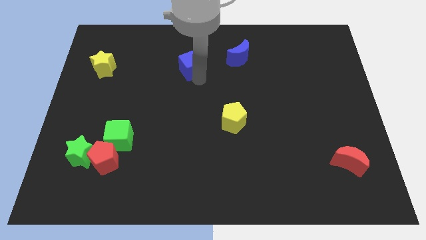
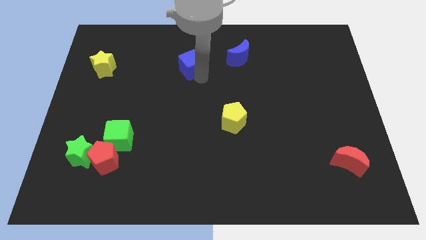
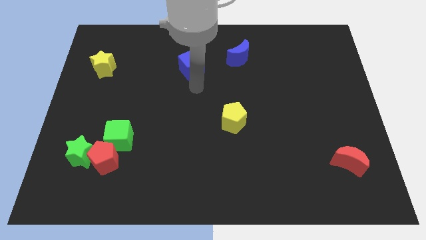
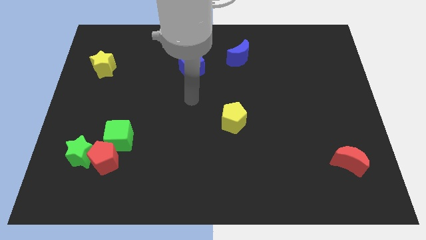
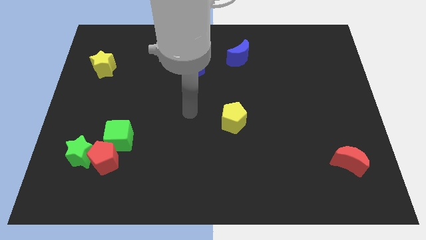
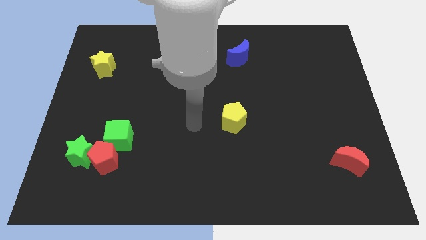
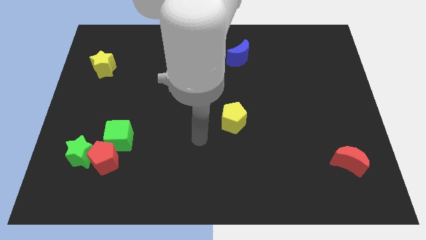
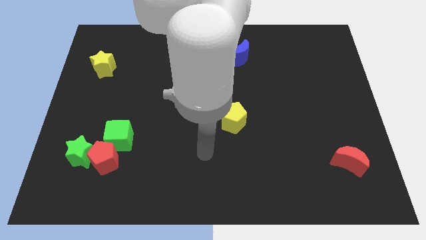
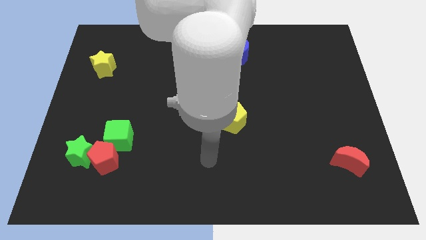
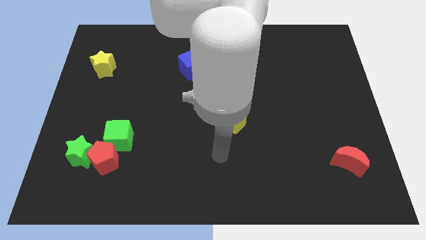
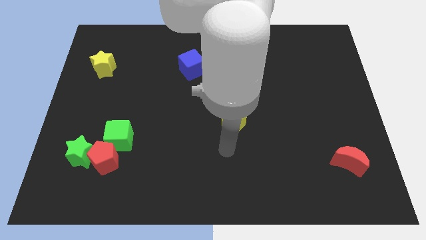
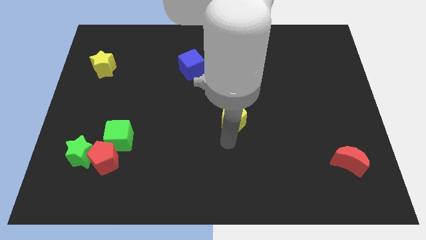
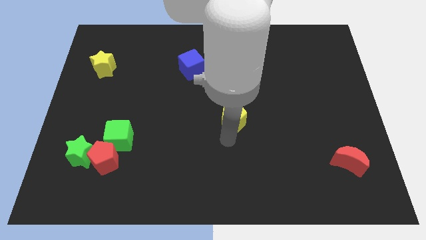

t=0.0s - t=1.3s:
place the arm below yellow pentagon

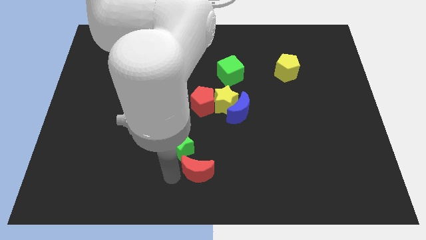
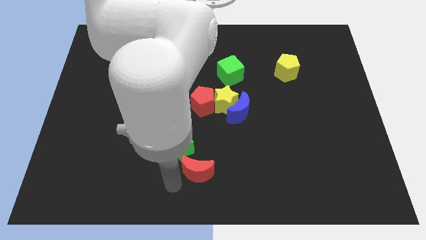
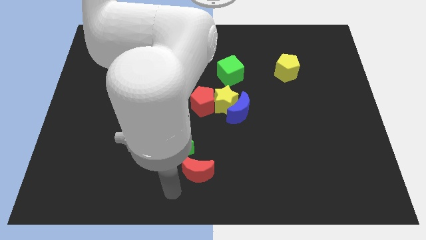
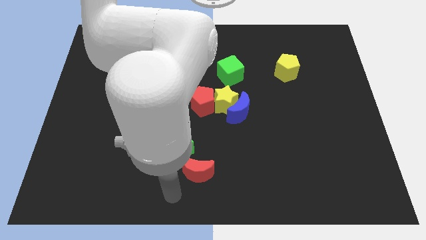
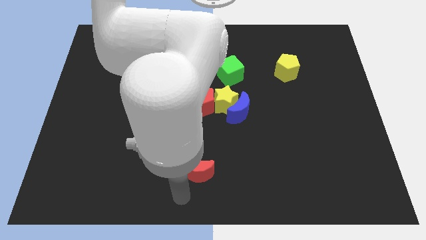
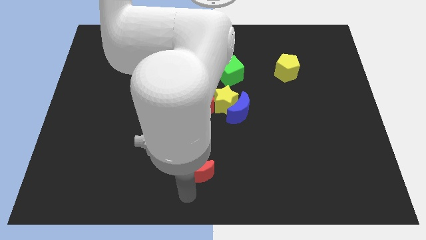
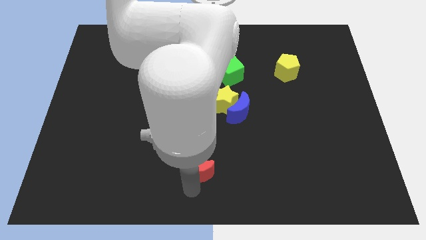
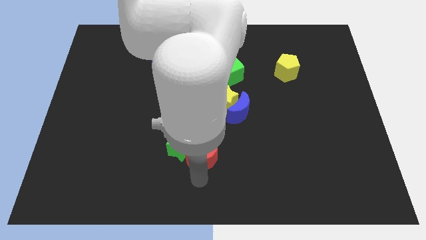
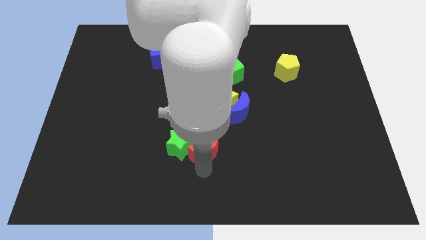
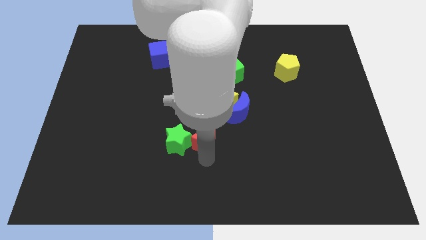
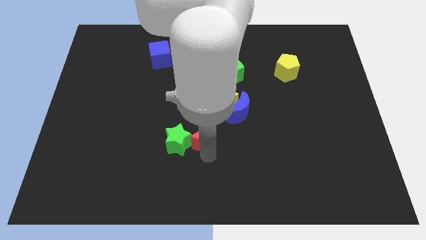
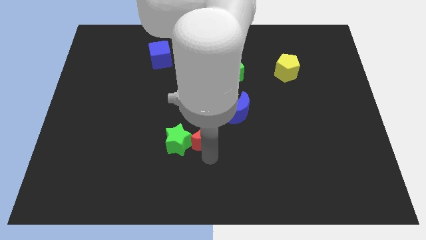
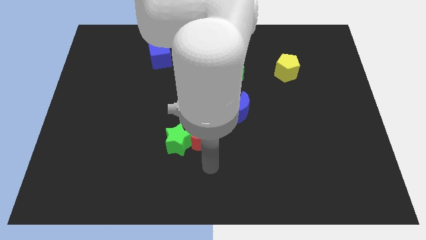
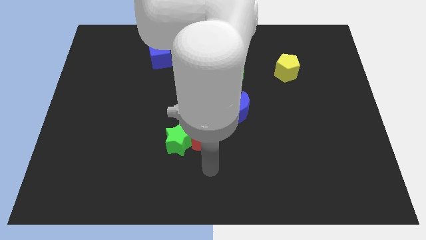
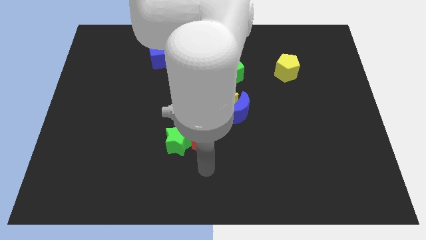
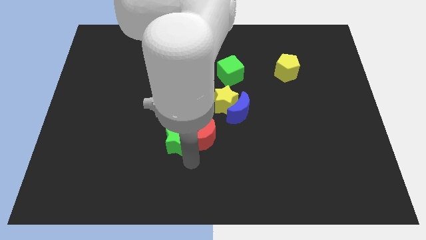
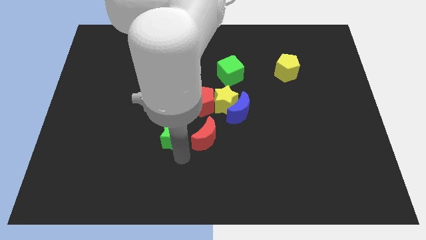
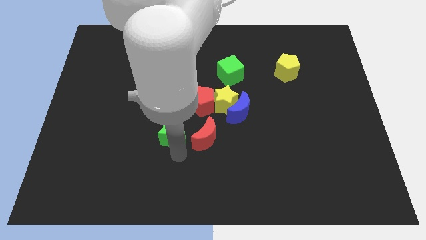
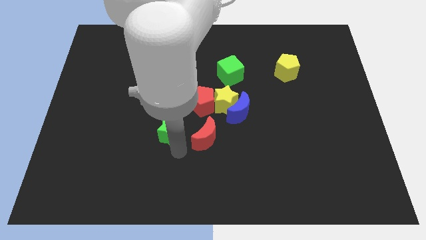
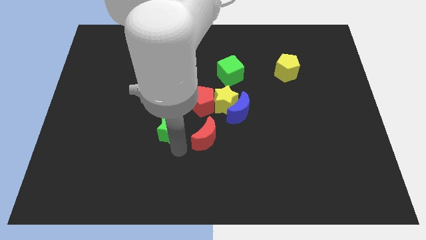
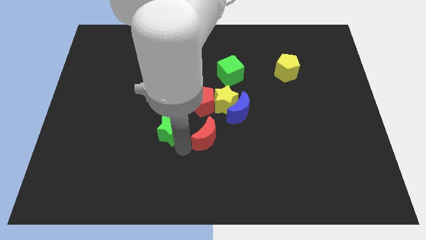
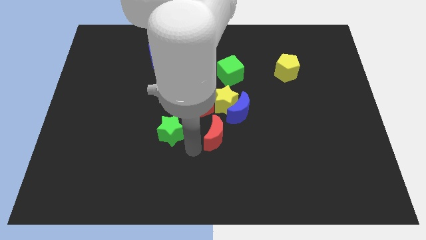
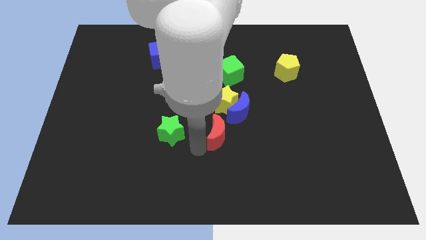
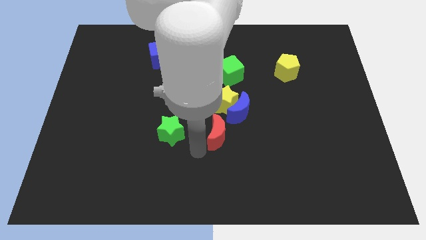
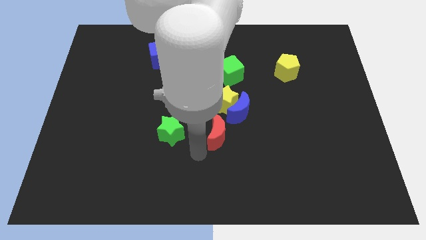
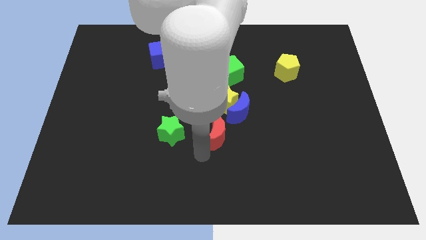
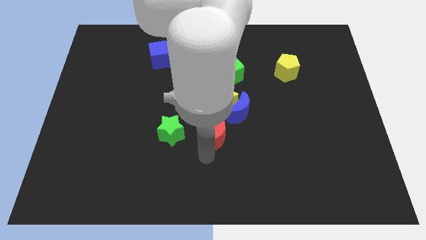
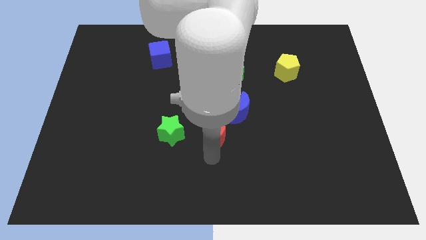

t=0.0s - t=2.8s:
move the red moon slightly up

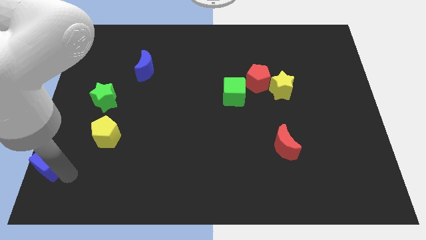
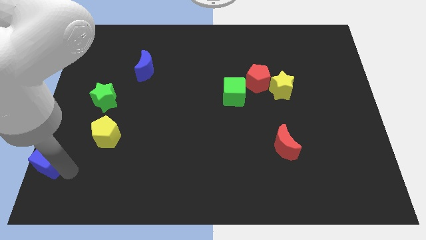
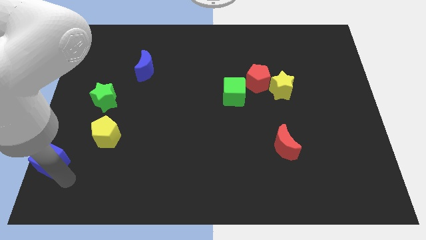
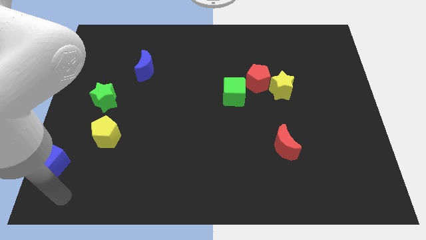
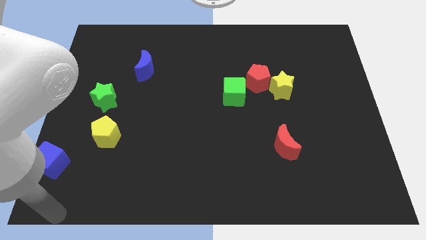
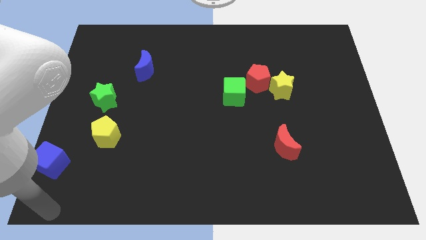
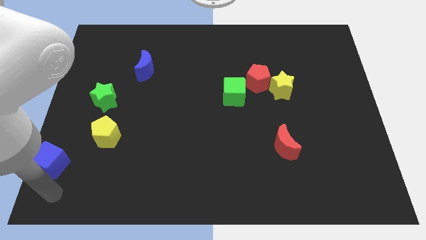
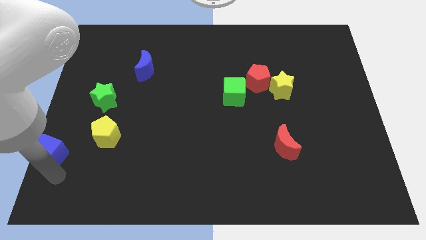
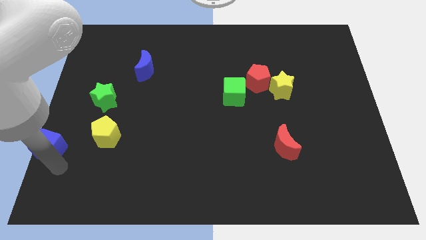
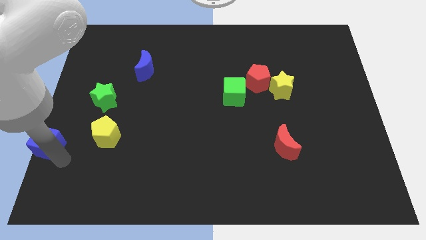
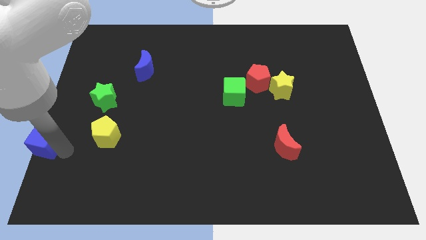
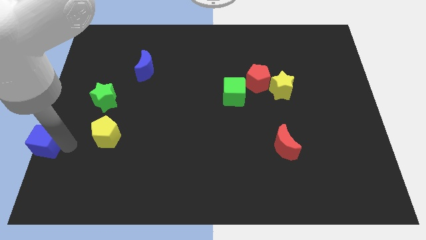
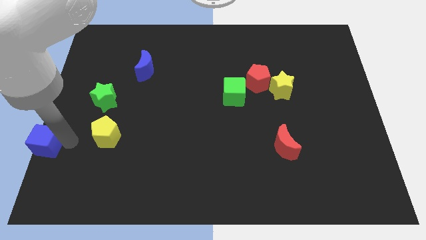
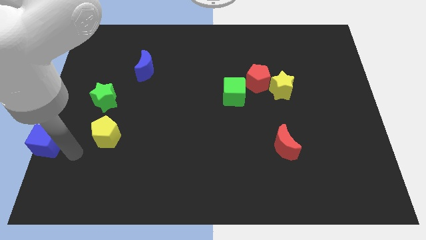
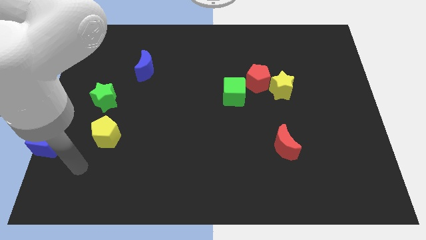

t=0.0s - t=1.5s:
place the blue cube to the left of the yellow pentagon

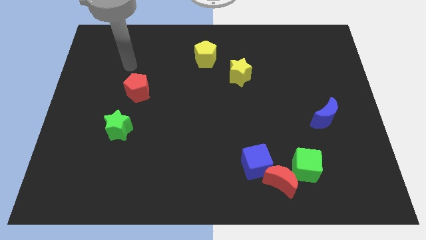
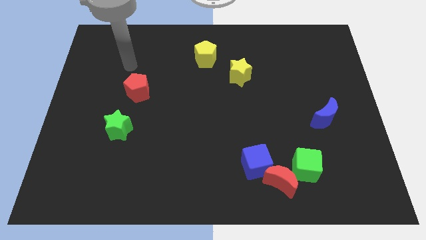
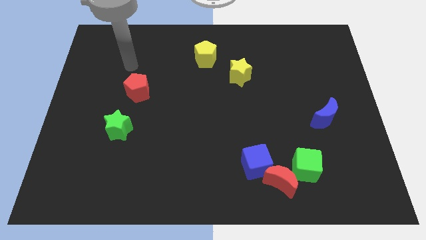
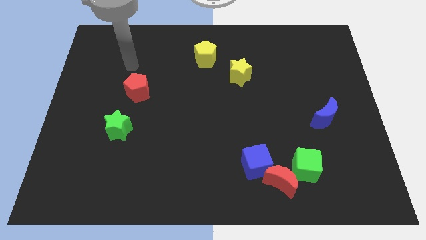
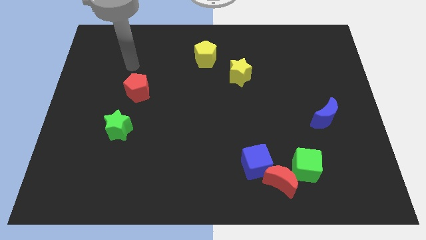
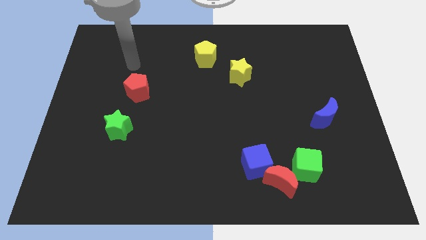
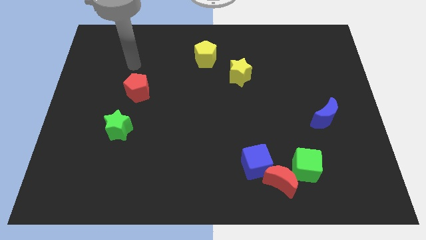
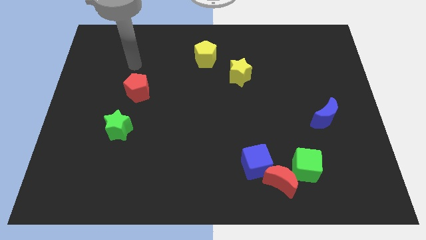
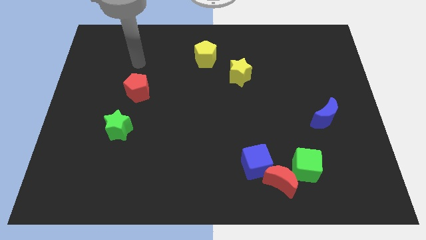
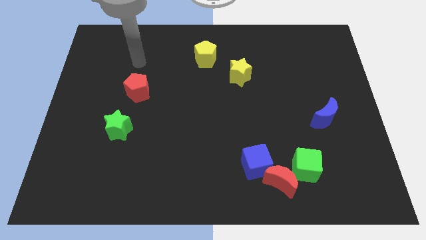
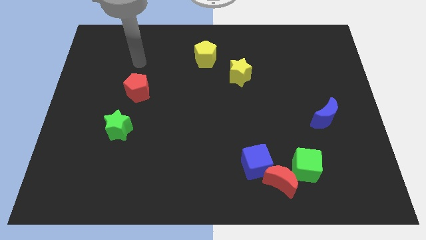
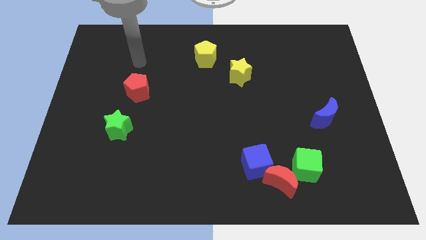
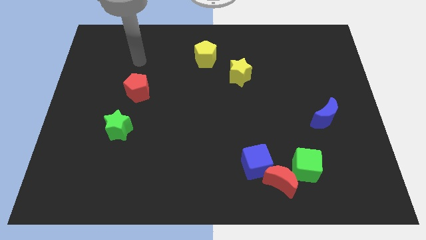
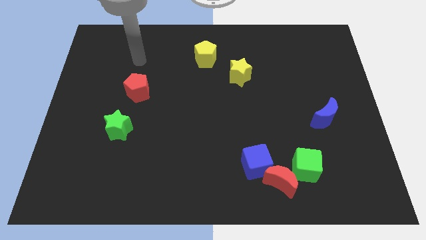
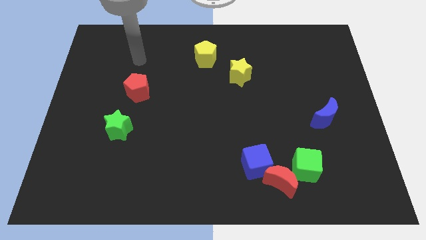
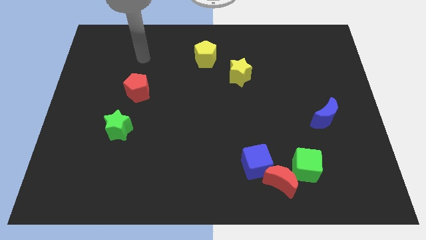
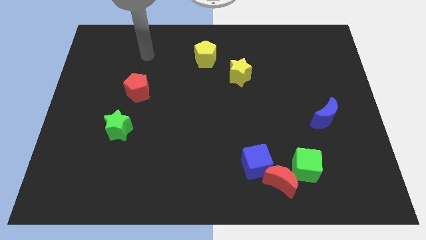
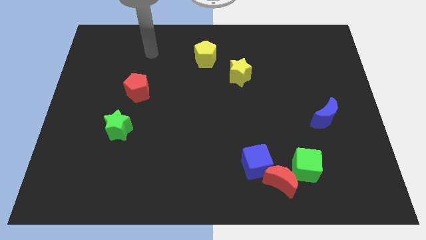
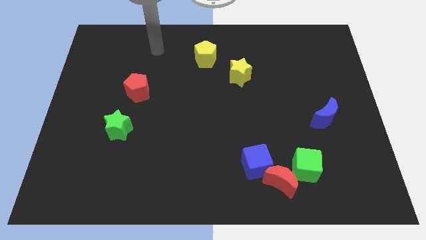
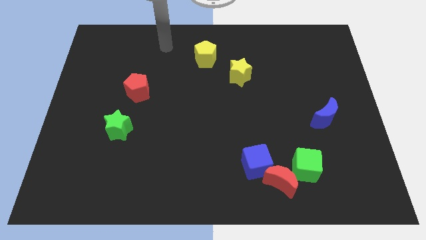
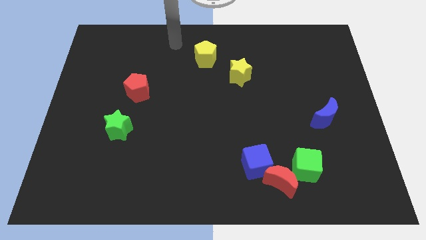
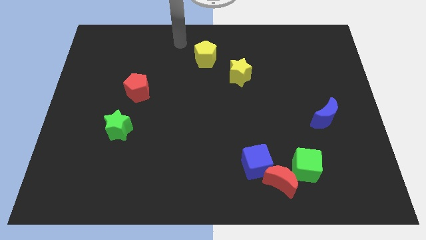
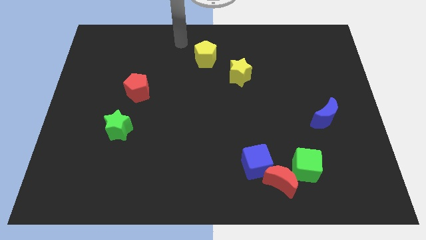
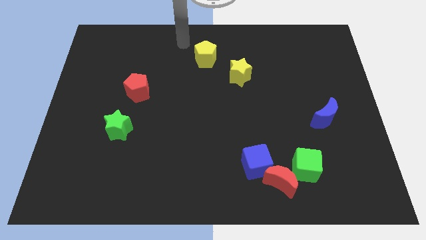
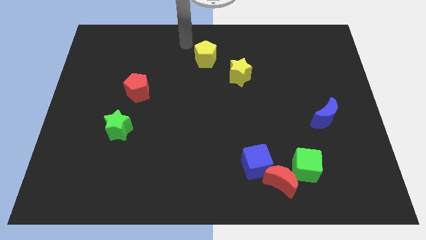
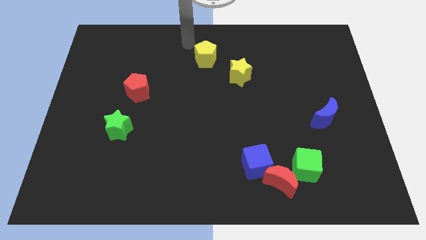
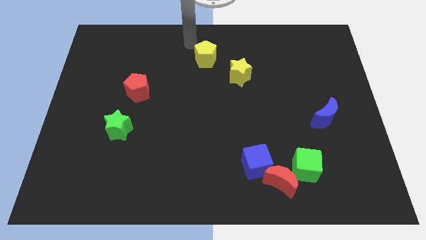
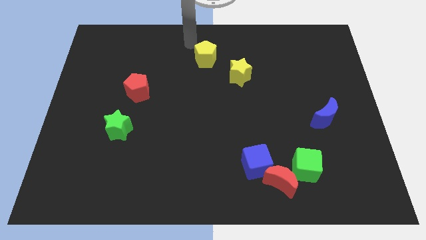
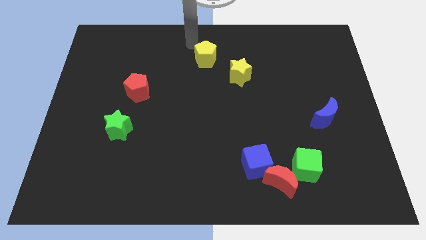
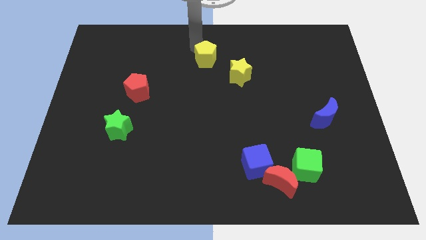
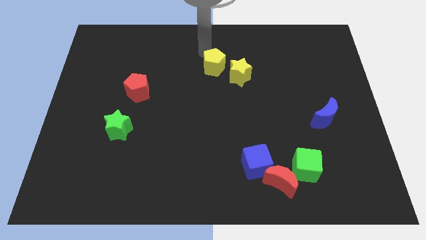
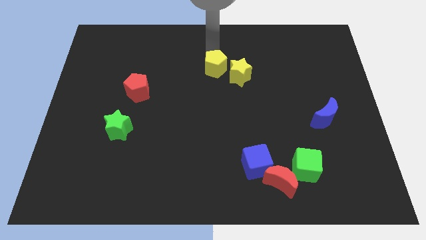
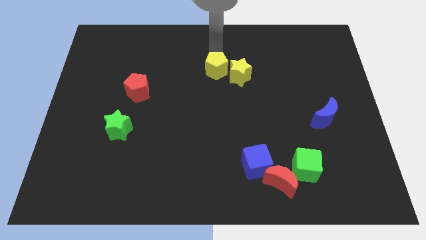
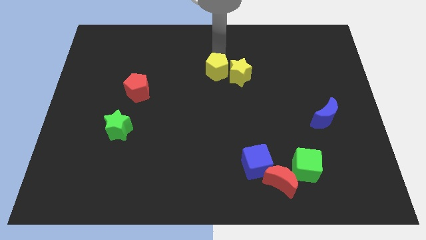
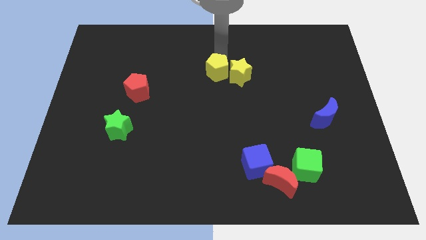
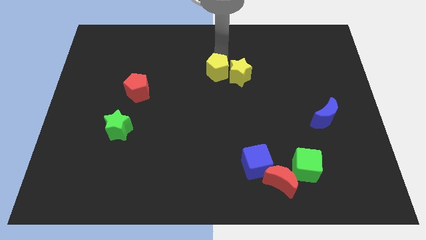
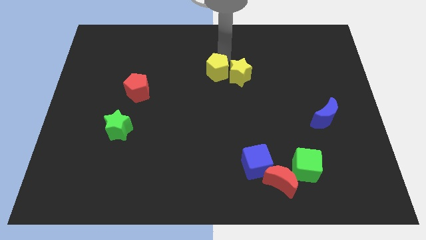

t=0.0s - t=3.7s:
push the yellow pentagon towards the center of the board
